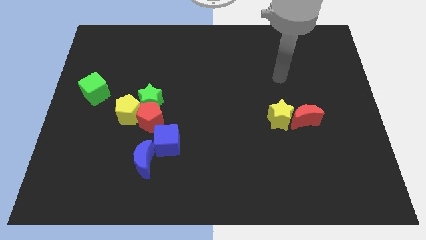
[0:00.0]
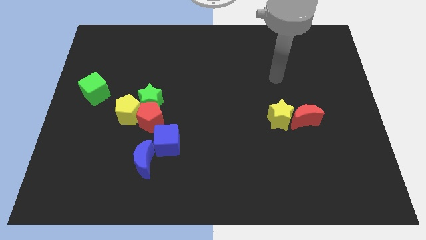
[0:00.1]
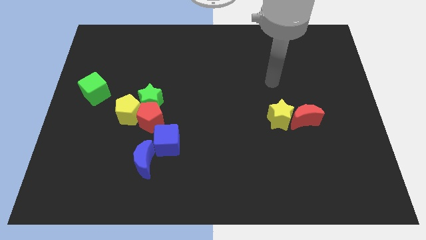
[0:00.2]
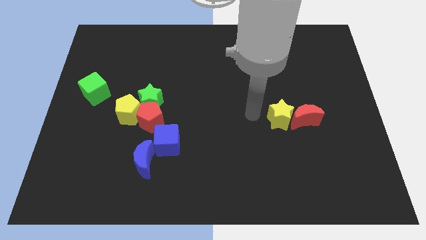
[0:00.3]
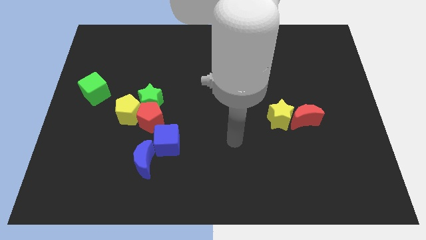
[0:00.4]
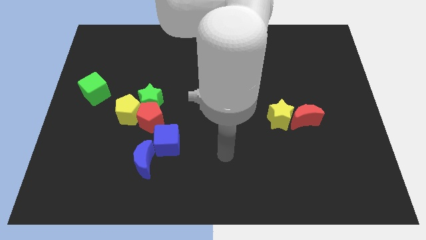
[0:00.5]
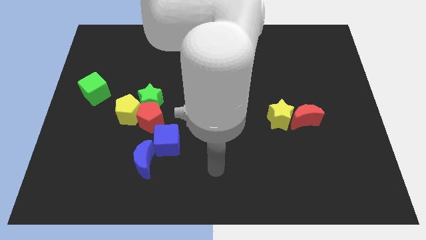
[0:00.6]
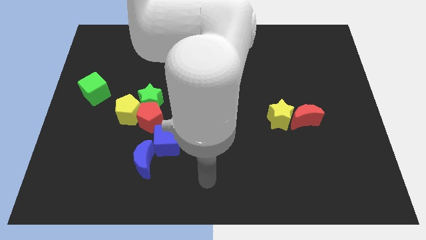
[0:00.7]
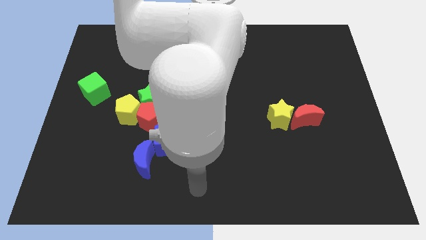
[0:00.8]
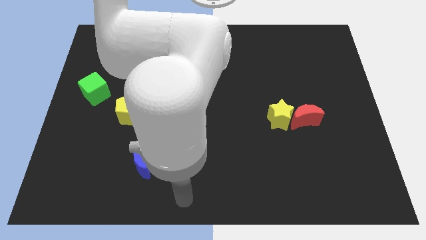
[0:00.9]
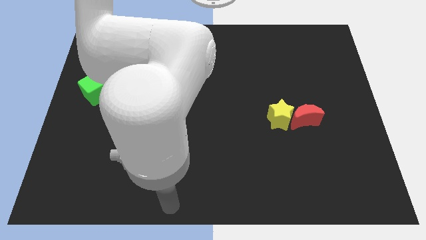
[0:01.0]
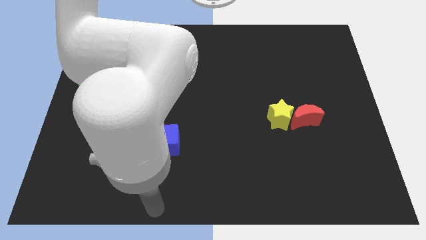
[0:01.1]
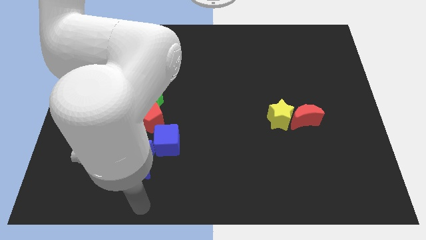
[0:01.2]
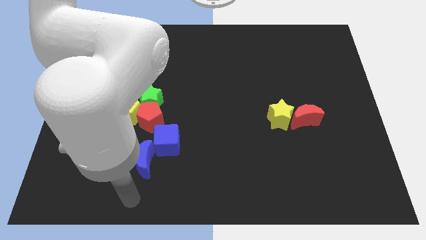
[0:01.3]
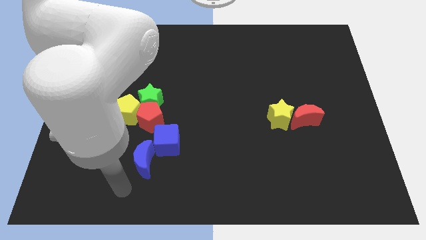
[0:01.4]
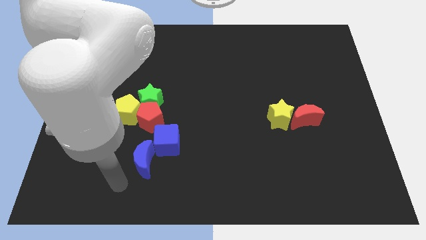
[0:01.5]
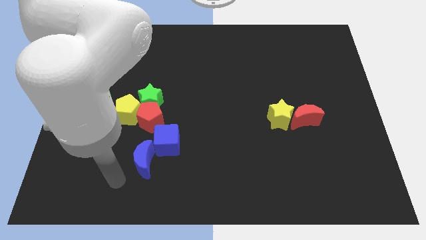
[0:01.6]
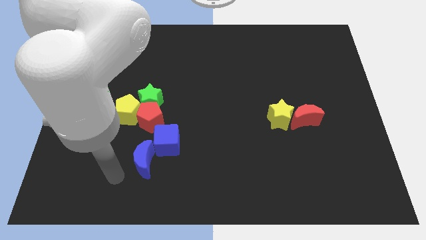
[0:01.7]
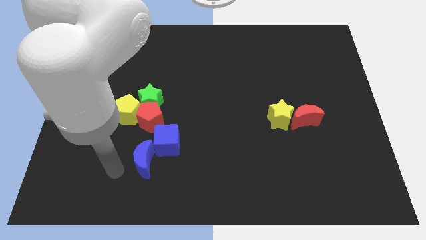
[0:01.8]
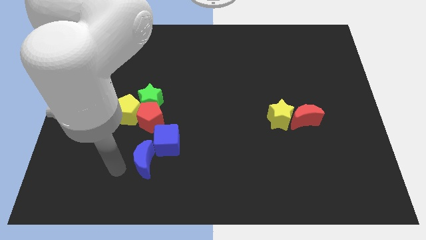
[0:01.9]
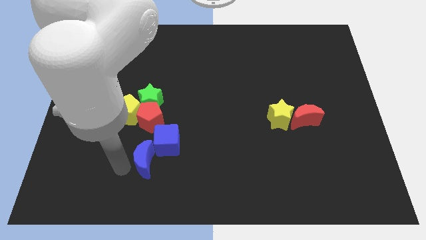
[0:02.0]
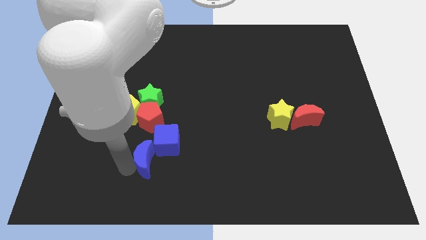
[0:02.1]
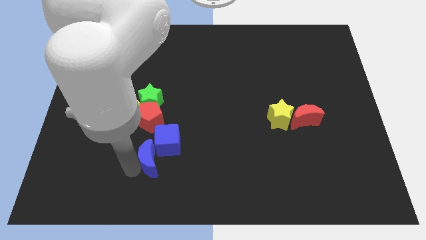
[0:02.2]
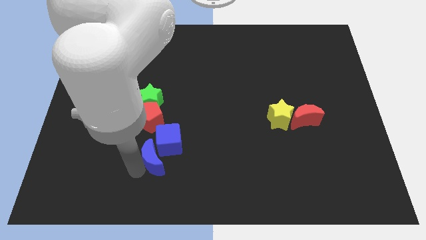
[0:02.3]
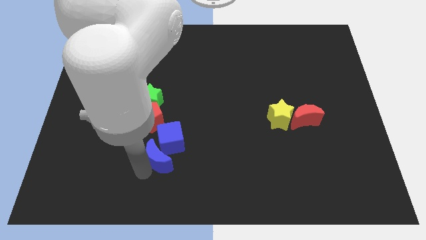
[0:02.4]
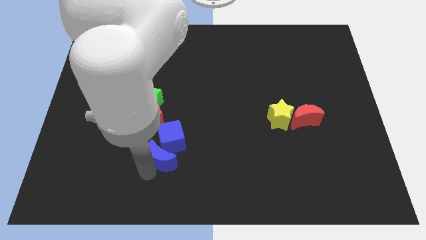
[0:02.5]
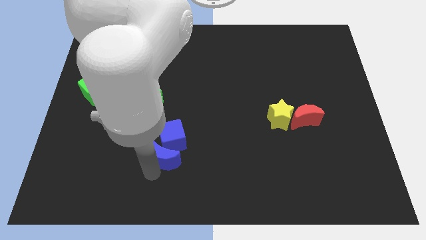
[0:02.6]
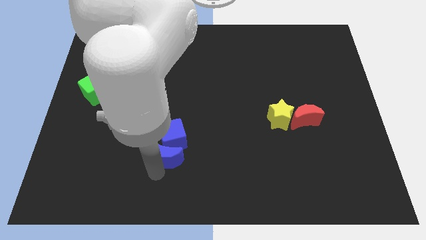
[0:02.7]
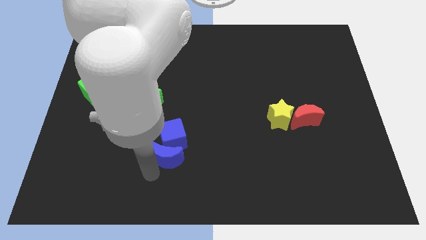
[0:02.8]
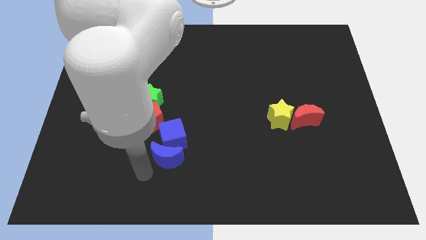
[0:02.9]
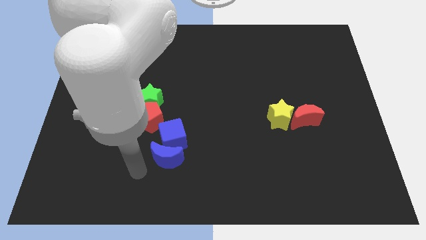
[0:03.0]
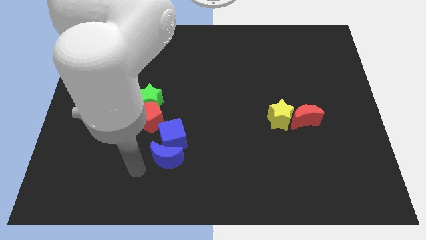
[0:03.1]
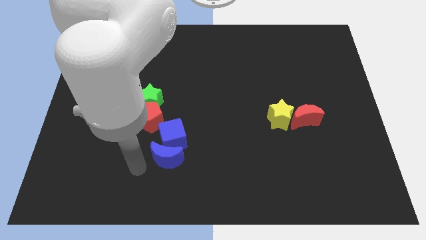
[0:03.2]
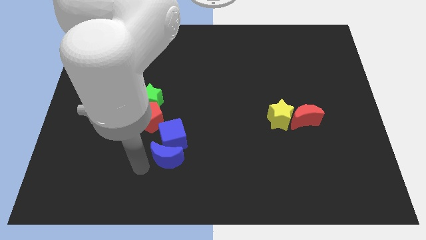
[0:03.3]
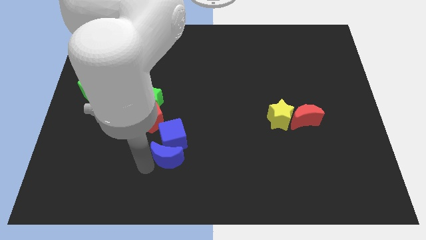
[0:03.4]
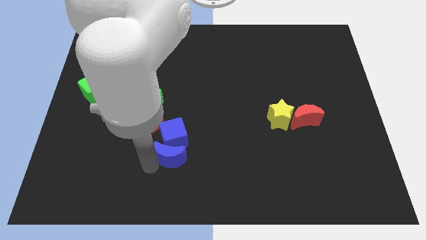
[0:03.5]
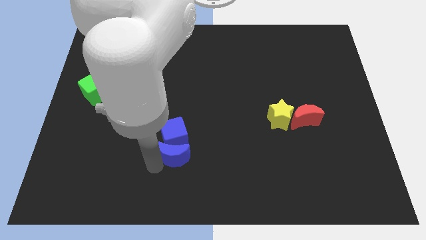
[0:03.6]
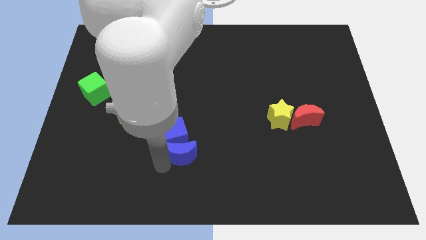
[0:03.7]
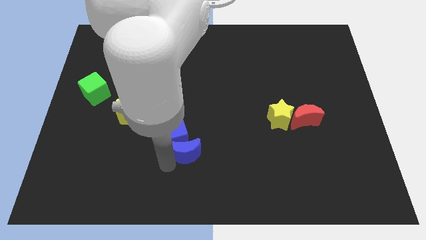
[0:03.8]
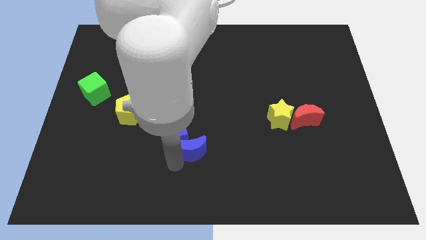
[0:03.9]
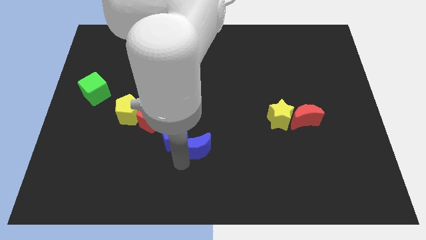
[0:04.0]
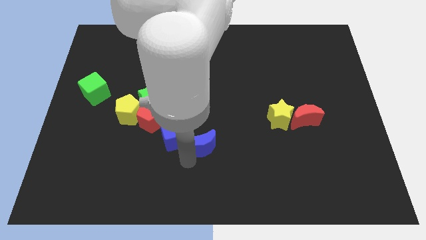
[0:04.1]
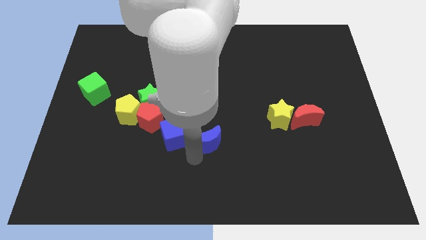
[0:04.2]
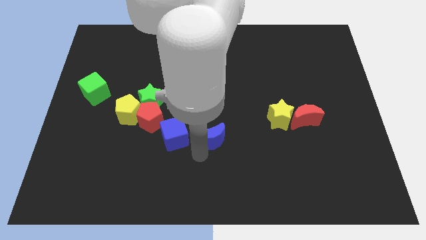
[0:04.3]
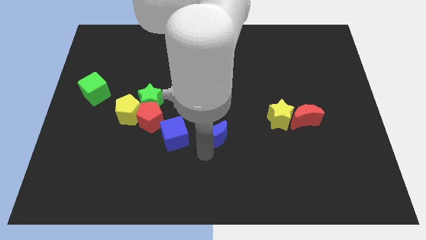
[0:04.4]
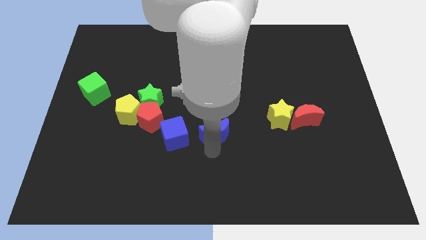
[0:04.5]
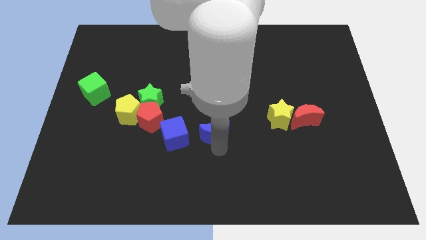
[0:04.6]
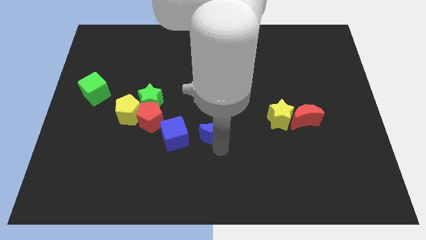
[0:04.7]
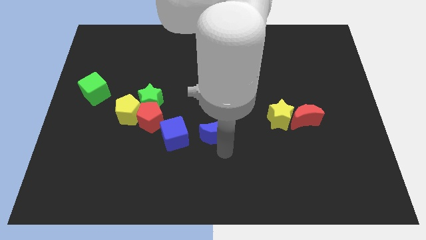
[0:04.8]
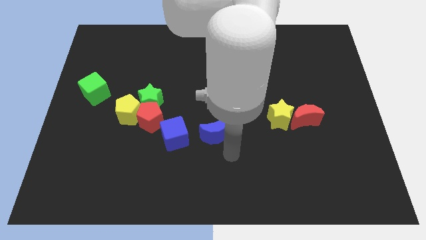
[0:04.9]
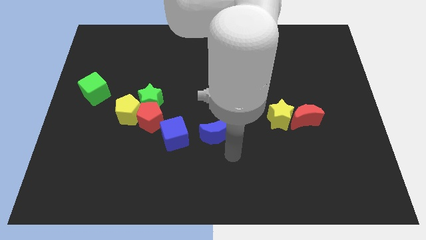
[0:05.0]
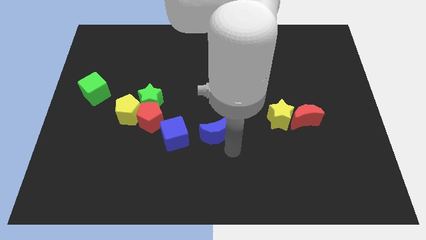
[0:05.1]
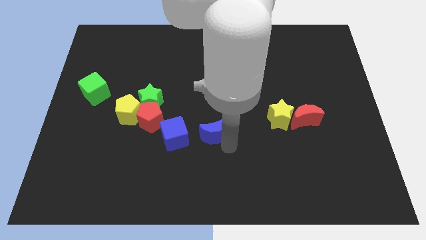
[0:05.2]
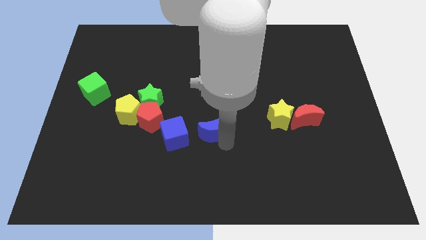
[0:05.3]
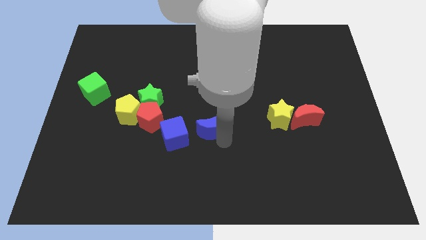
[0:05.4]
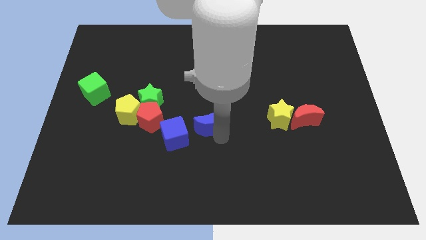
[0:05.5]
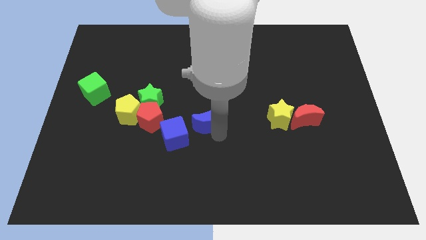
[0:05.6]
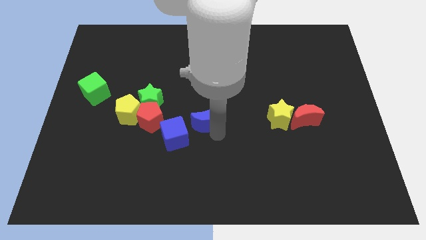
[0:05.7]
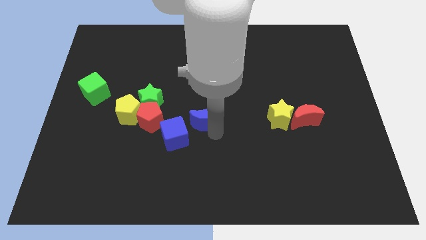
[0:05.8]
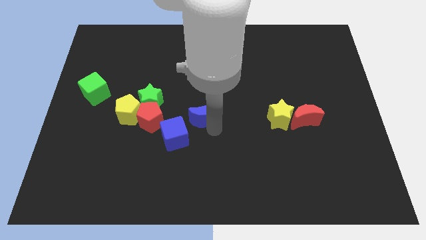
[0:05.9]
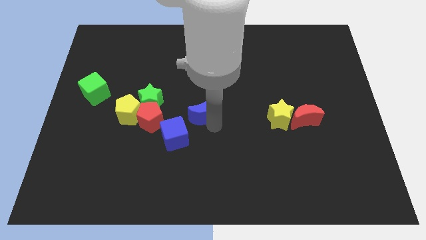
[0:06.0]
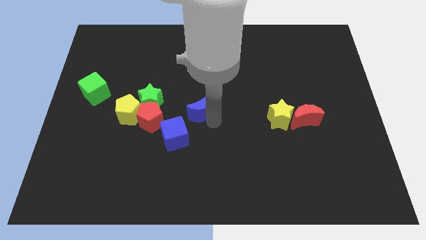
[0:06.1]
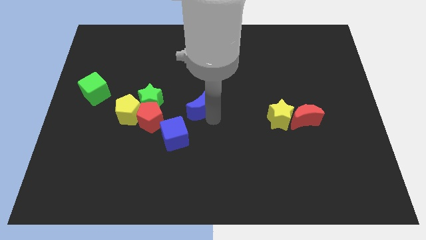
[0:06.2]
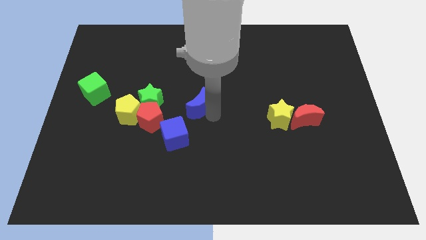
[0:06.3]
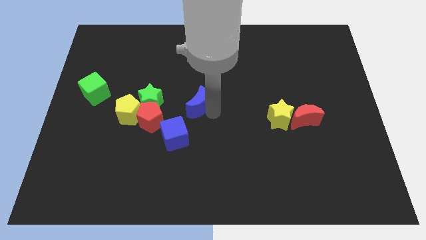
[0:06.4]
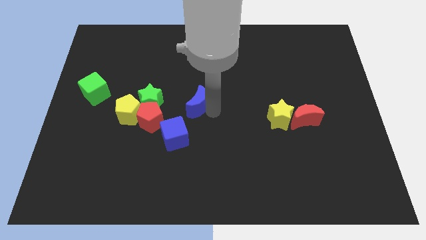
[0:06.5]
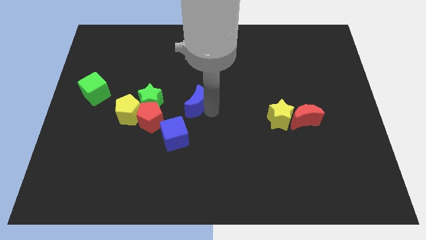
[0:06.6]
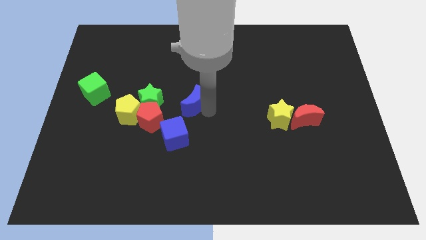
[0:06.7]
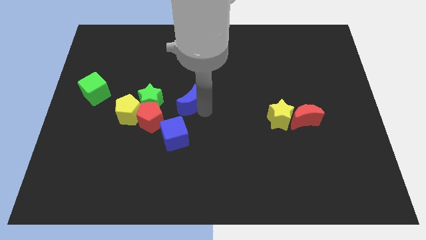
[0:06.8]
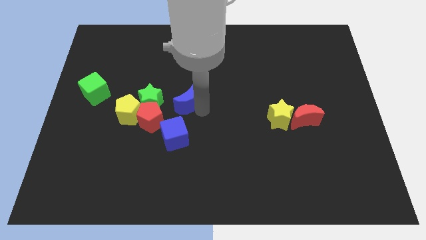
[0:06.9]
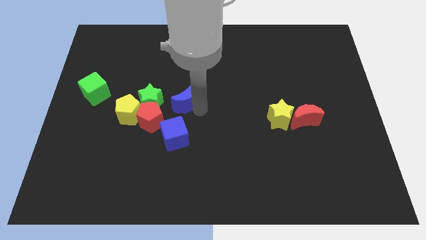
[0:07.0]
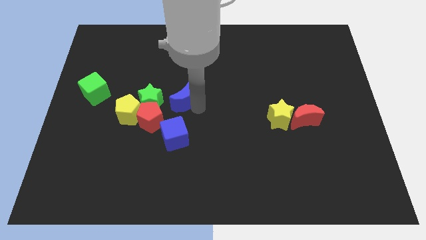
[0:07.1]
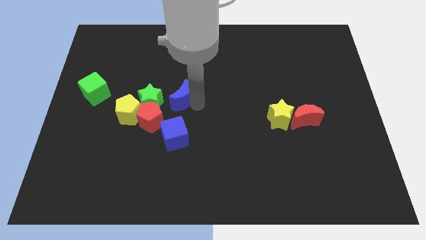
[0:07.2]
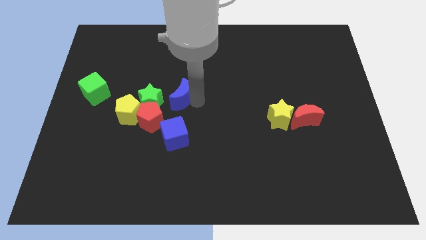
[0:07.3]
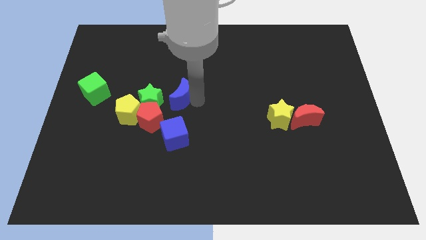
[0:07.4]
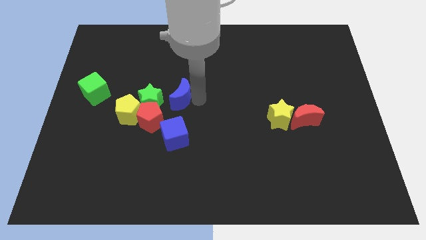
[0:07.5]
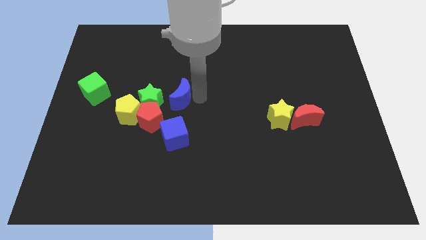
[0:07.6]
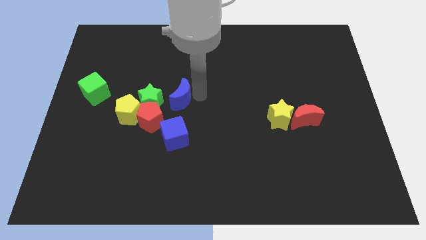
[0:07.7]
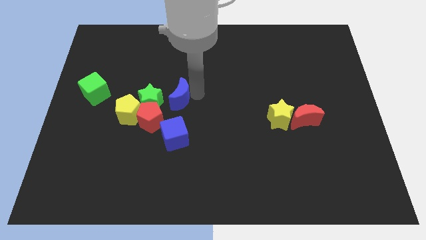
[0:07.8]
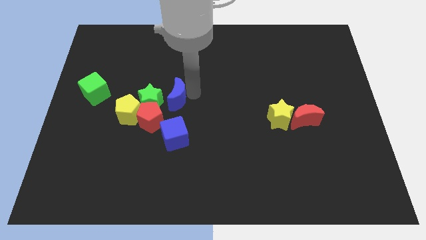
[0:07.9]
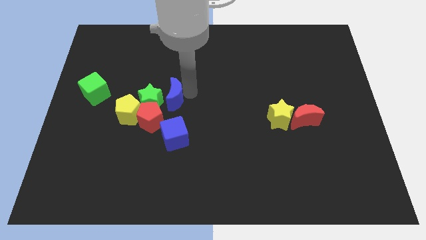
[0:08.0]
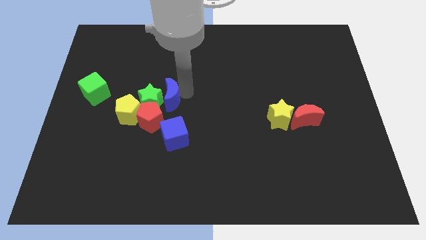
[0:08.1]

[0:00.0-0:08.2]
put the blue moon next to the green star

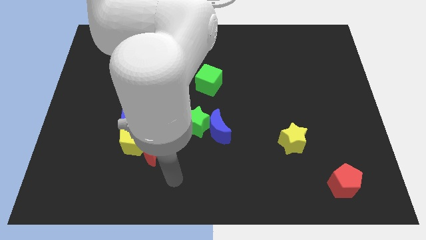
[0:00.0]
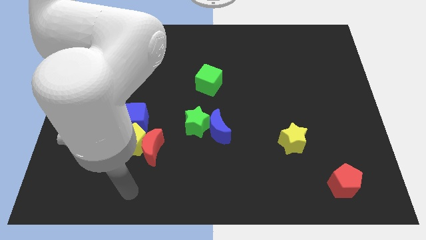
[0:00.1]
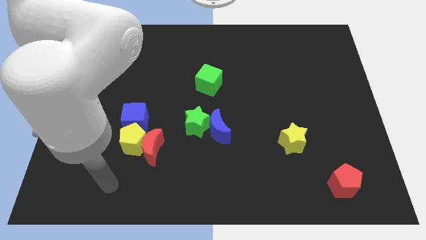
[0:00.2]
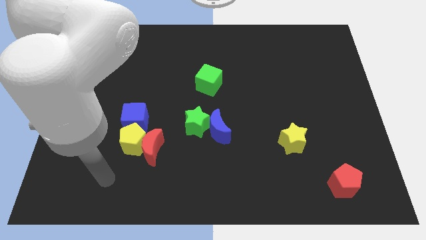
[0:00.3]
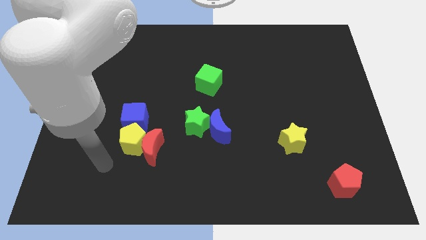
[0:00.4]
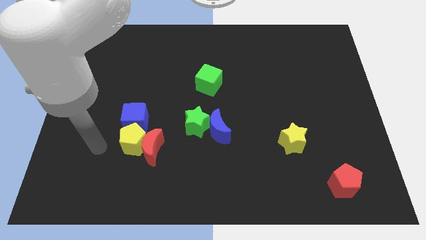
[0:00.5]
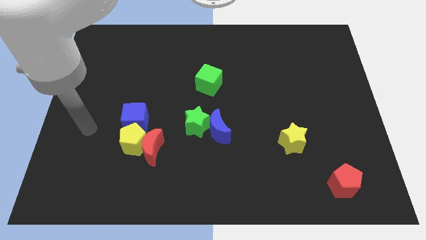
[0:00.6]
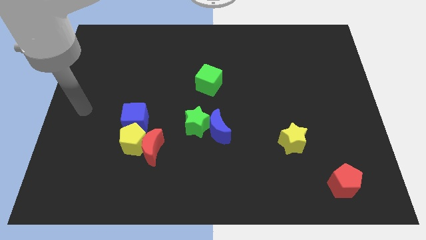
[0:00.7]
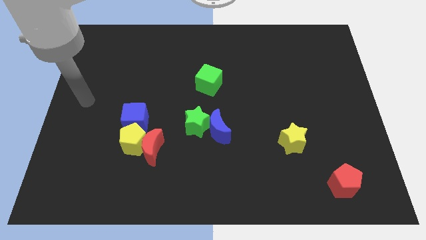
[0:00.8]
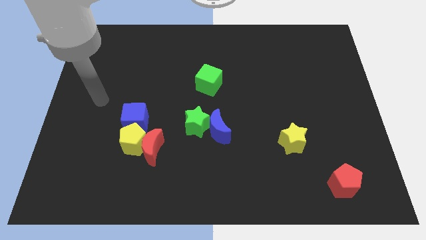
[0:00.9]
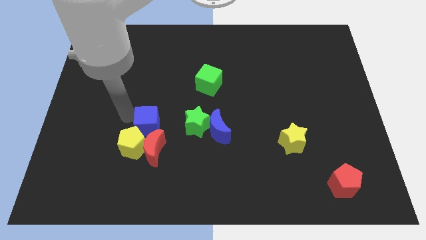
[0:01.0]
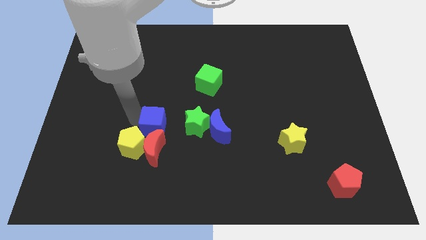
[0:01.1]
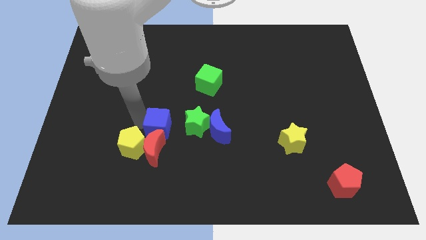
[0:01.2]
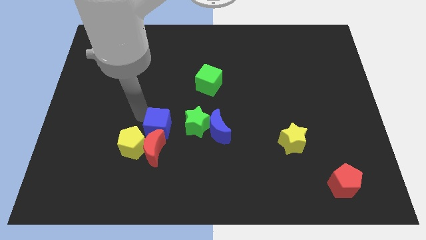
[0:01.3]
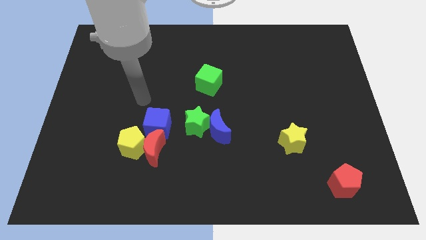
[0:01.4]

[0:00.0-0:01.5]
move the blue cube towards the red moon
